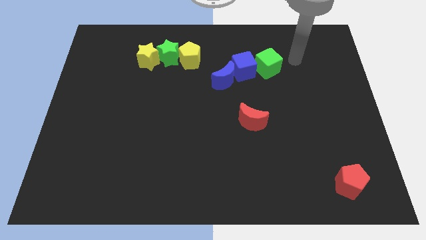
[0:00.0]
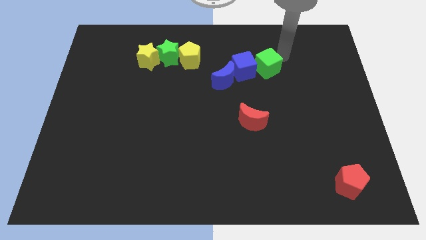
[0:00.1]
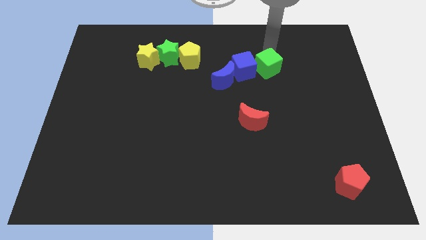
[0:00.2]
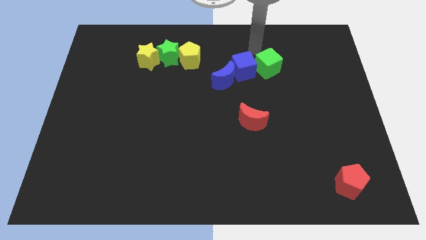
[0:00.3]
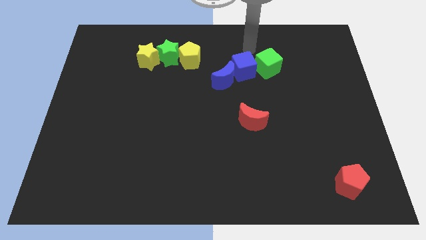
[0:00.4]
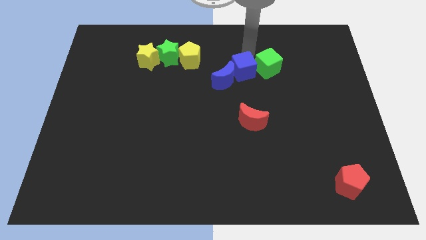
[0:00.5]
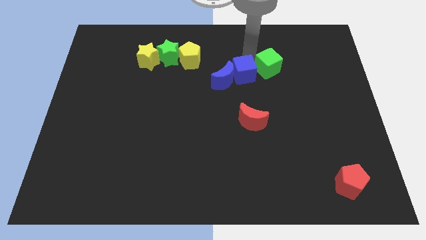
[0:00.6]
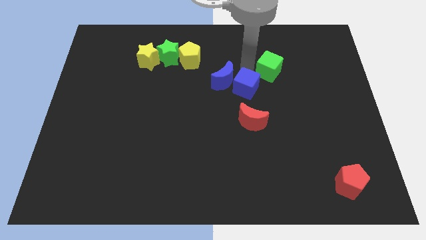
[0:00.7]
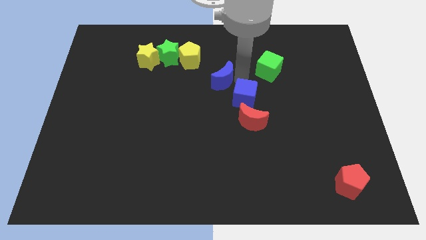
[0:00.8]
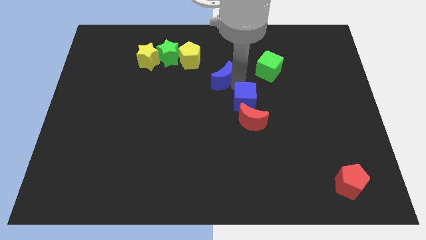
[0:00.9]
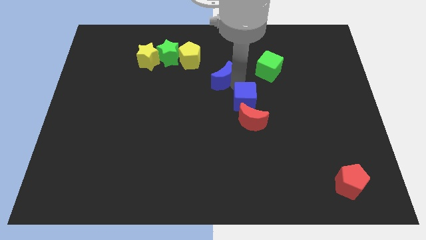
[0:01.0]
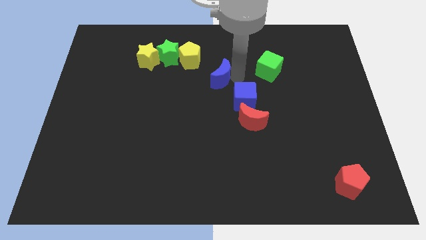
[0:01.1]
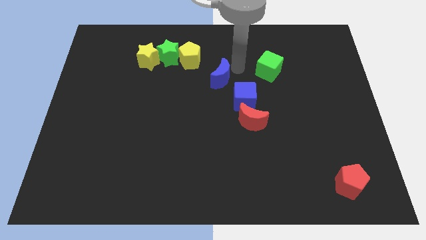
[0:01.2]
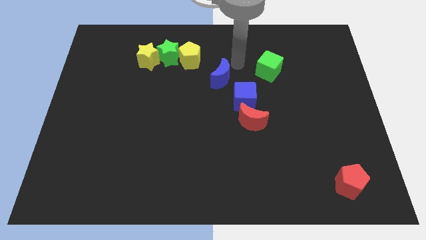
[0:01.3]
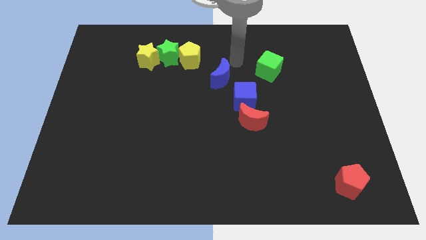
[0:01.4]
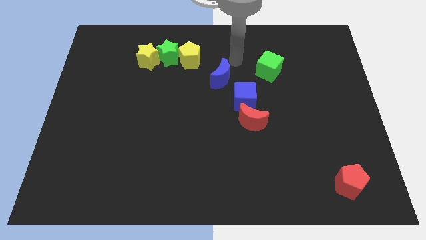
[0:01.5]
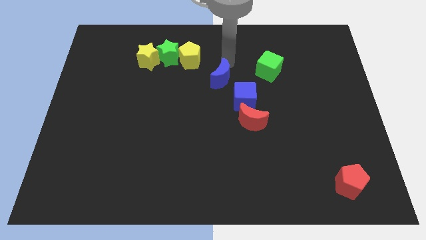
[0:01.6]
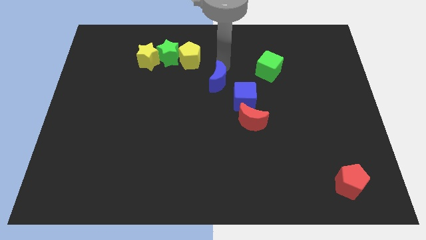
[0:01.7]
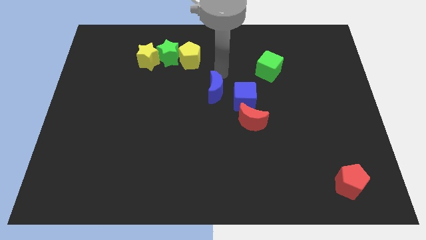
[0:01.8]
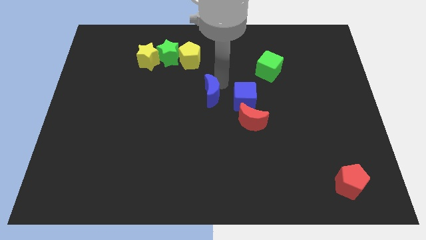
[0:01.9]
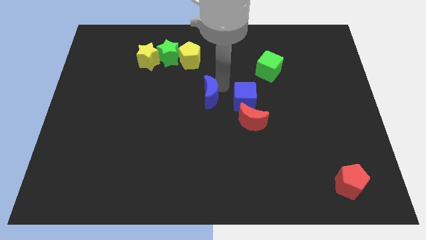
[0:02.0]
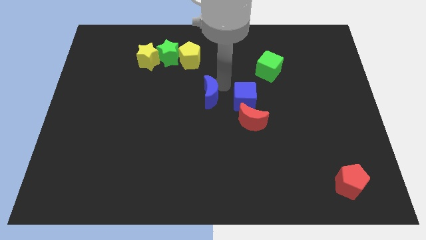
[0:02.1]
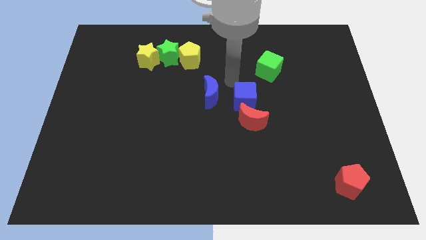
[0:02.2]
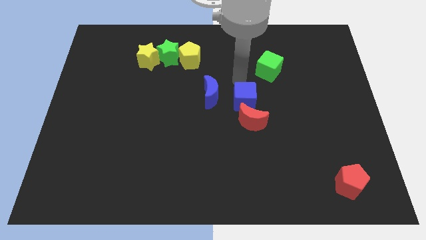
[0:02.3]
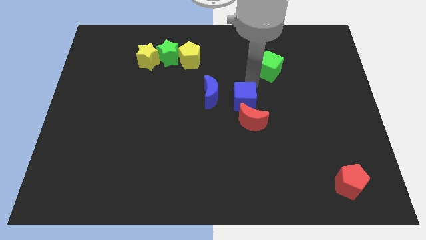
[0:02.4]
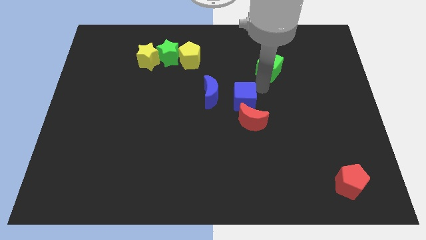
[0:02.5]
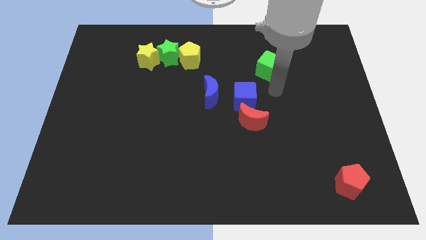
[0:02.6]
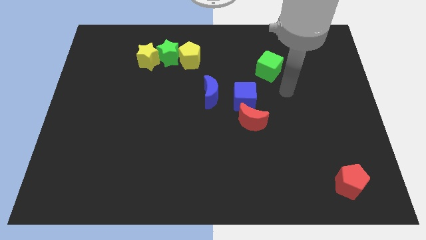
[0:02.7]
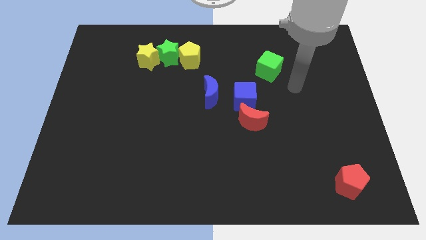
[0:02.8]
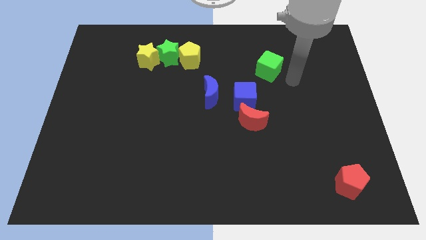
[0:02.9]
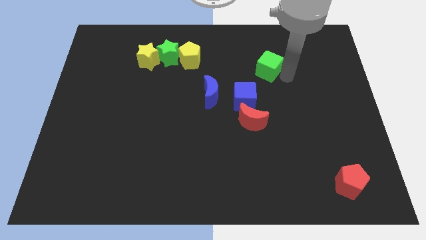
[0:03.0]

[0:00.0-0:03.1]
push the blue cube and the blue moon towards the center of the board

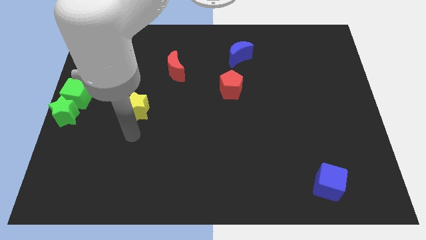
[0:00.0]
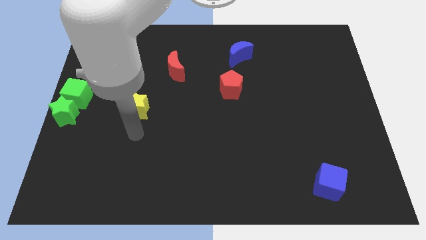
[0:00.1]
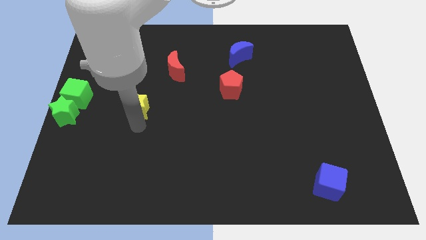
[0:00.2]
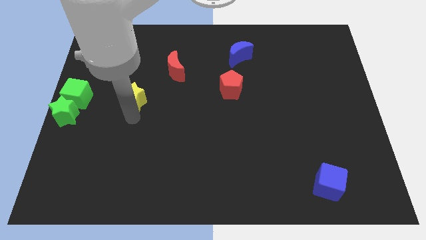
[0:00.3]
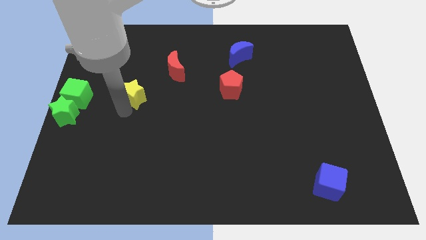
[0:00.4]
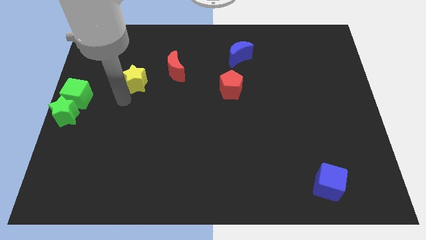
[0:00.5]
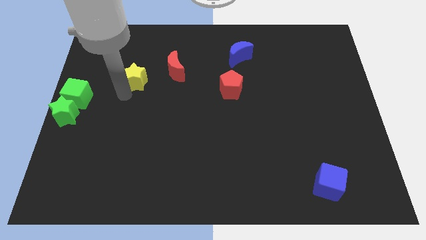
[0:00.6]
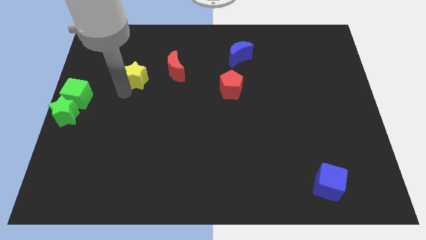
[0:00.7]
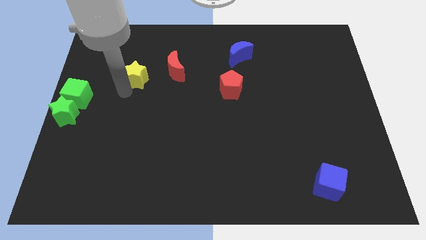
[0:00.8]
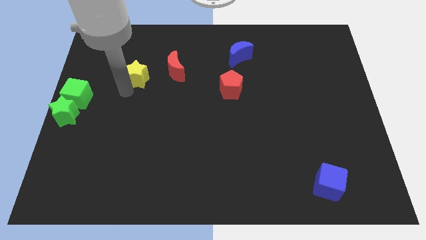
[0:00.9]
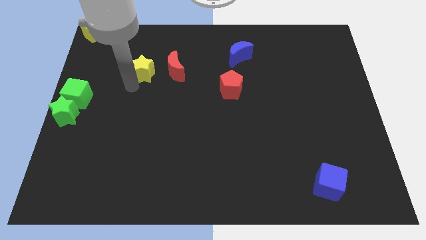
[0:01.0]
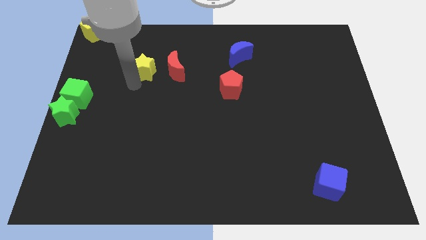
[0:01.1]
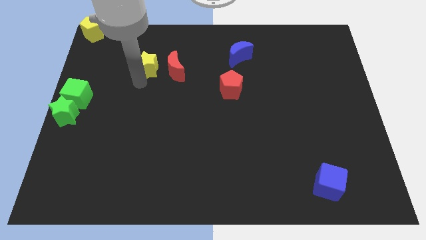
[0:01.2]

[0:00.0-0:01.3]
place the yellow star left to the red moon

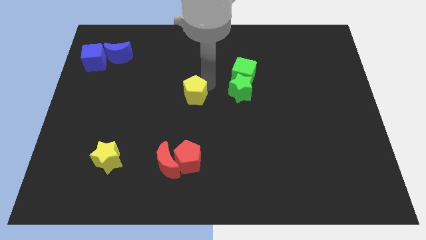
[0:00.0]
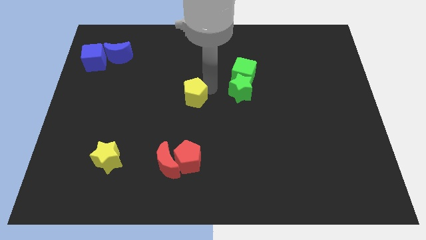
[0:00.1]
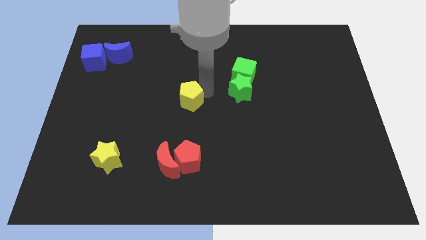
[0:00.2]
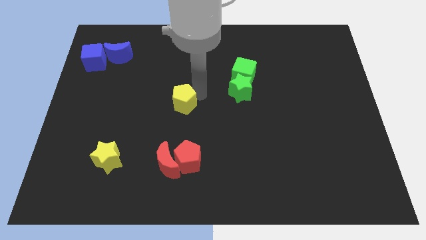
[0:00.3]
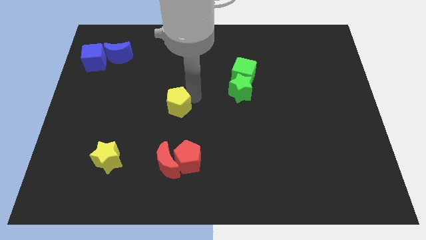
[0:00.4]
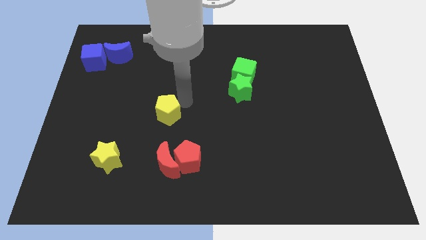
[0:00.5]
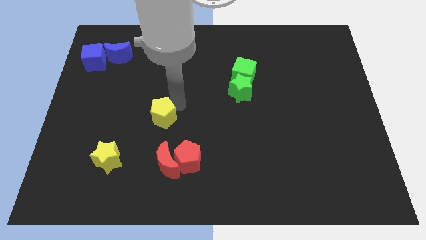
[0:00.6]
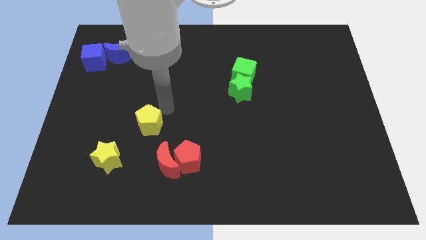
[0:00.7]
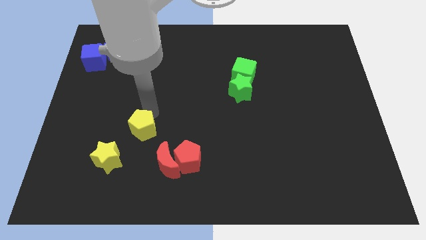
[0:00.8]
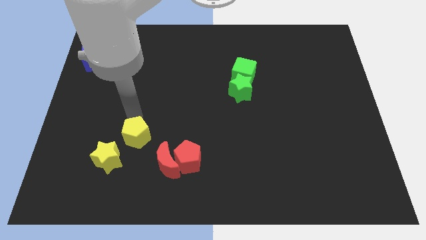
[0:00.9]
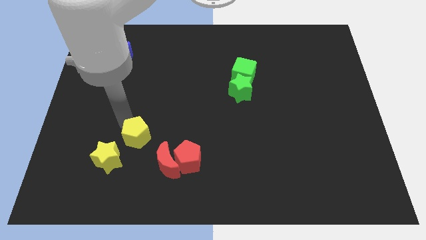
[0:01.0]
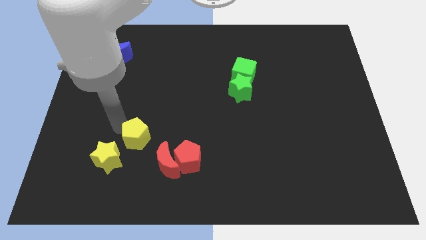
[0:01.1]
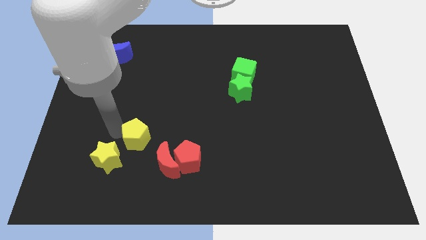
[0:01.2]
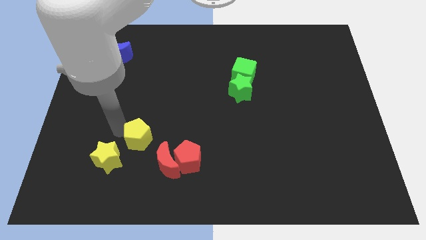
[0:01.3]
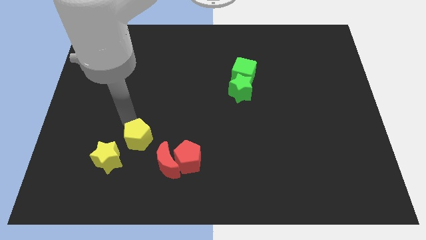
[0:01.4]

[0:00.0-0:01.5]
move the yellow pentagon towards the yellow star

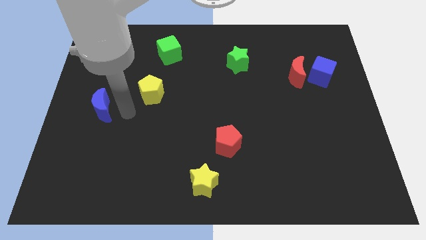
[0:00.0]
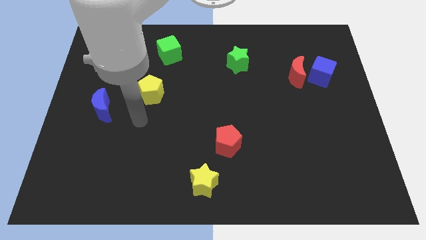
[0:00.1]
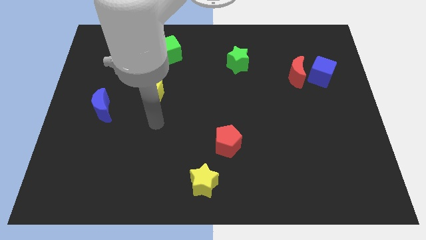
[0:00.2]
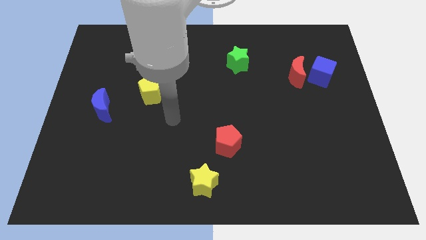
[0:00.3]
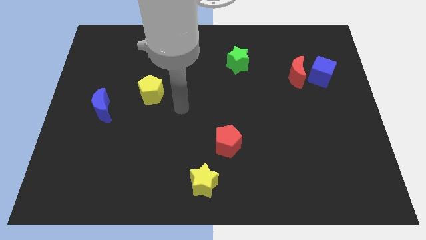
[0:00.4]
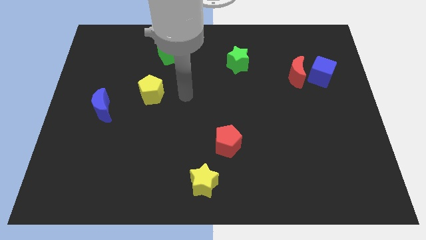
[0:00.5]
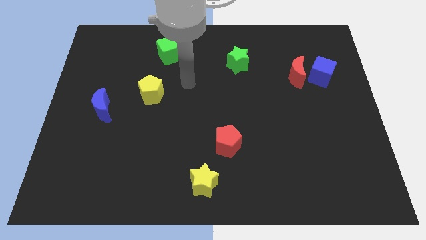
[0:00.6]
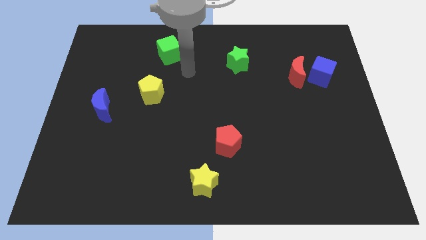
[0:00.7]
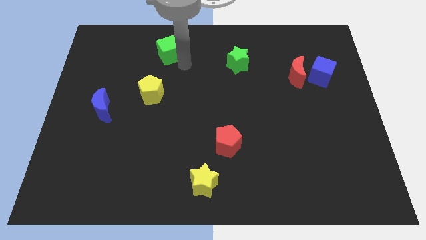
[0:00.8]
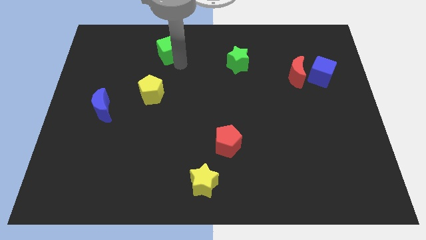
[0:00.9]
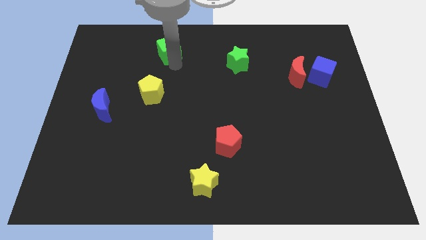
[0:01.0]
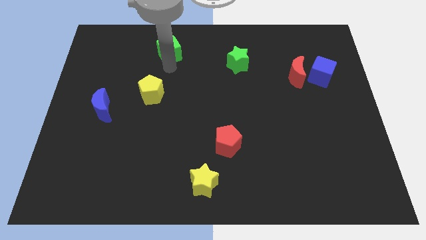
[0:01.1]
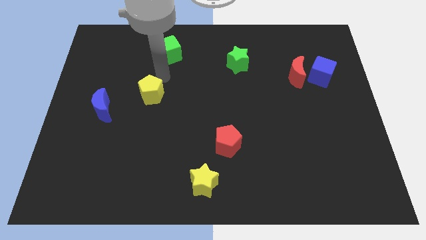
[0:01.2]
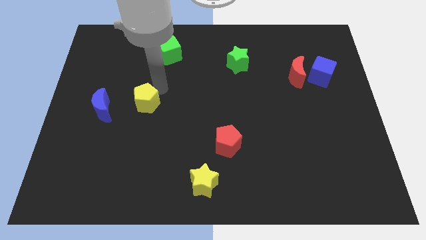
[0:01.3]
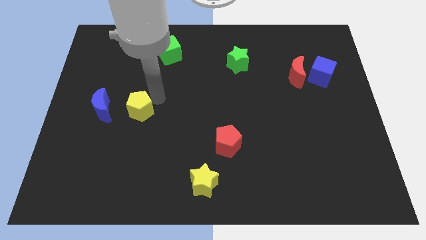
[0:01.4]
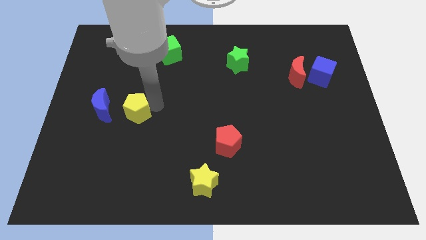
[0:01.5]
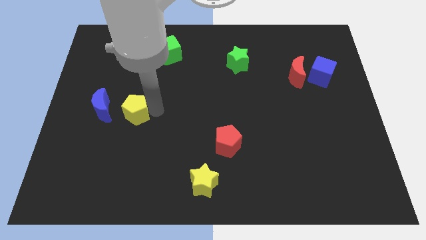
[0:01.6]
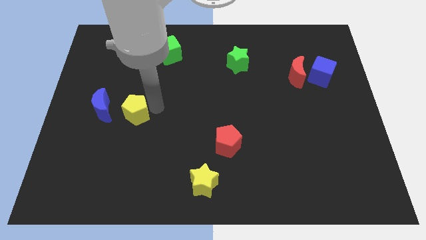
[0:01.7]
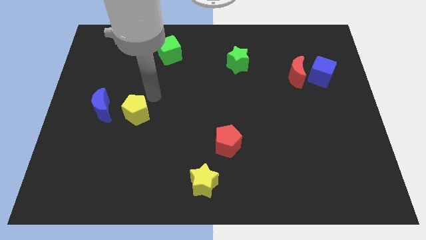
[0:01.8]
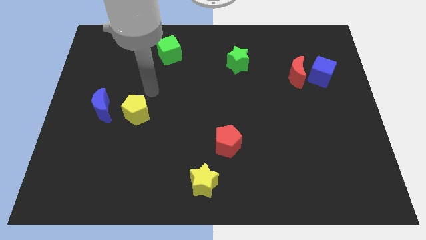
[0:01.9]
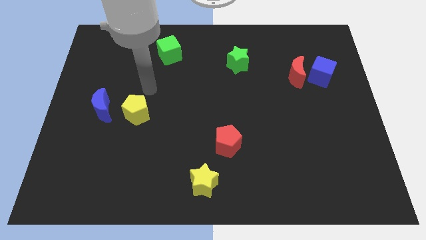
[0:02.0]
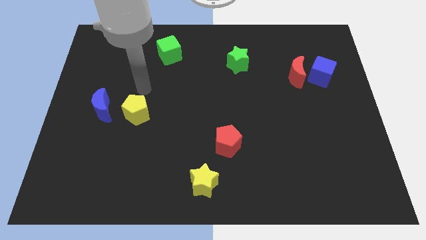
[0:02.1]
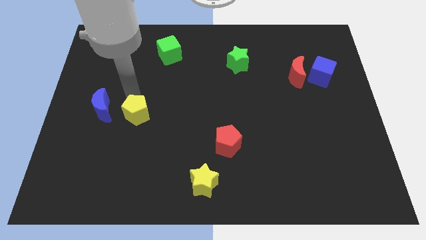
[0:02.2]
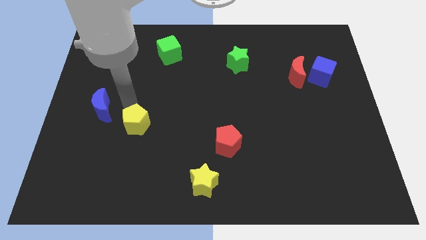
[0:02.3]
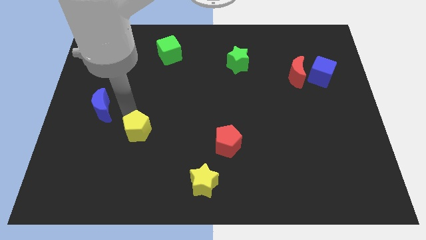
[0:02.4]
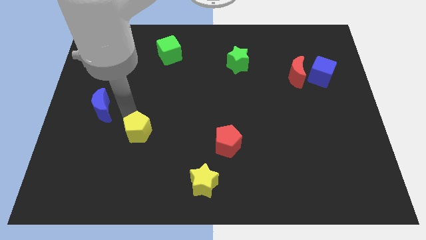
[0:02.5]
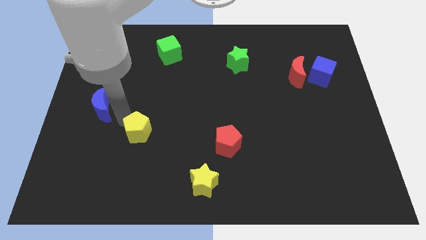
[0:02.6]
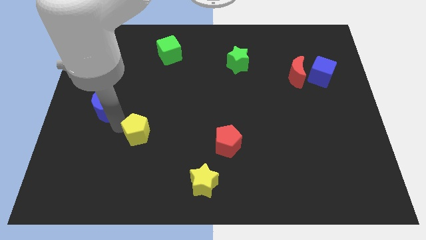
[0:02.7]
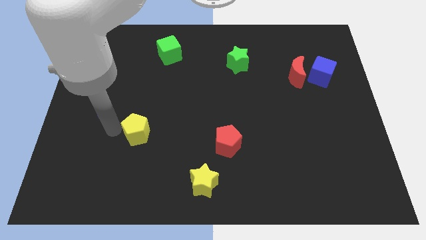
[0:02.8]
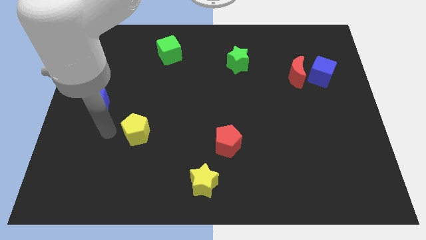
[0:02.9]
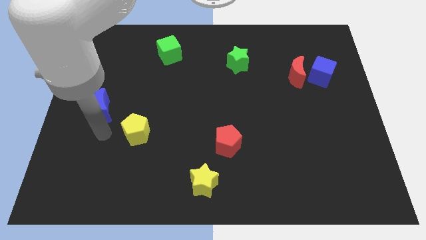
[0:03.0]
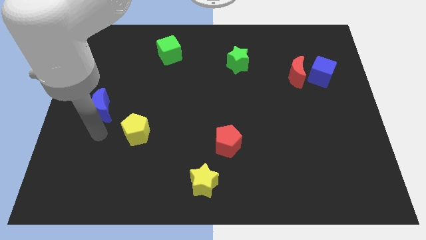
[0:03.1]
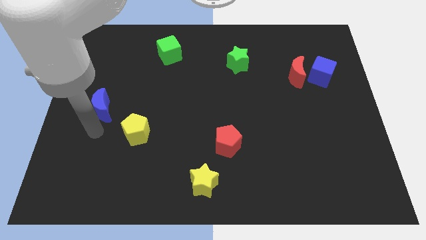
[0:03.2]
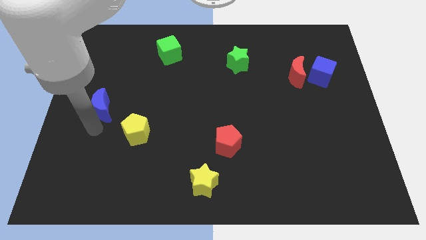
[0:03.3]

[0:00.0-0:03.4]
move the yellow pentagon diagonally on the bottom right side of the blue crescent
